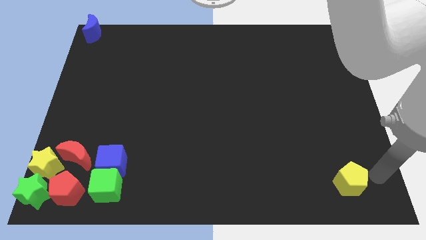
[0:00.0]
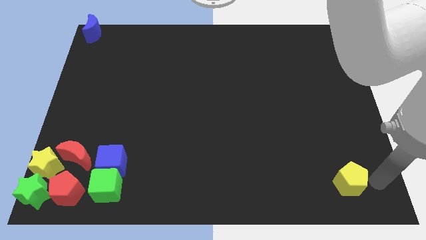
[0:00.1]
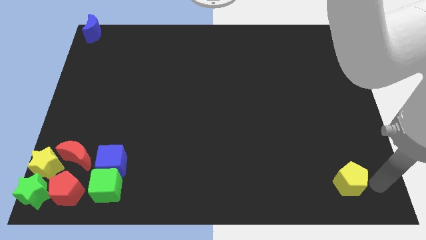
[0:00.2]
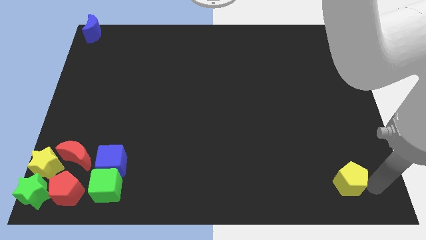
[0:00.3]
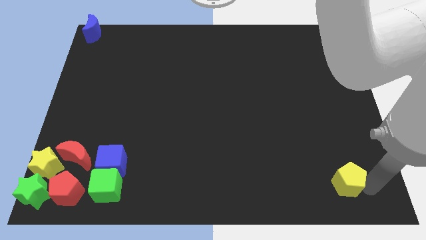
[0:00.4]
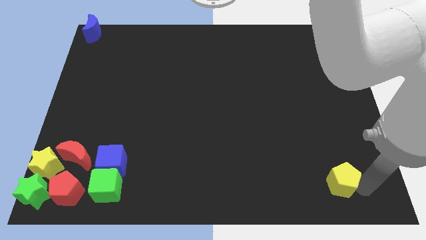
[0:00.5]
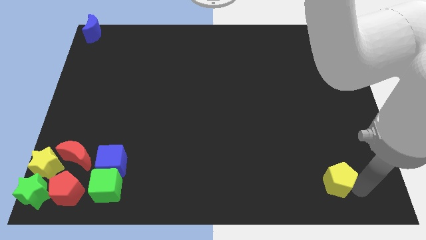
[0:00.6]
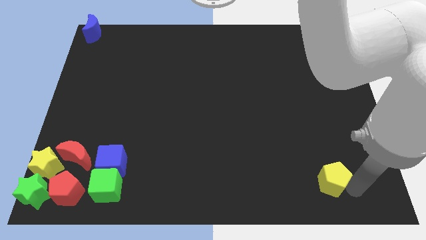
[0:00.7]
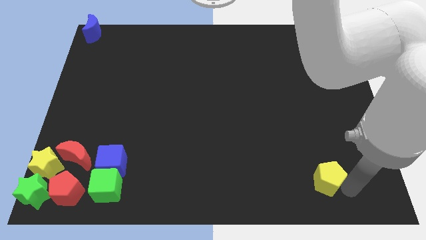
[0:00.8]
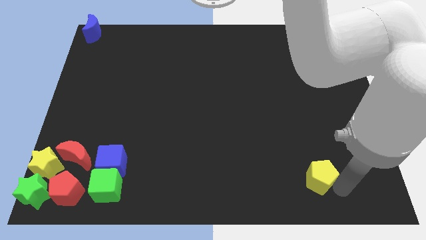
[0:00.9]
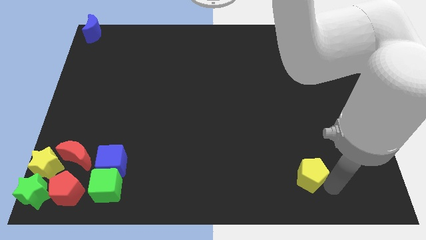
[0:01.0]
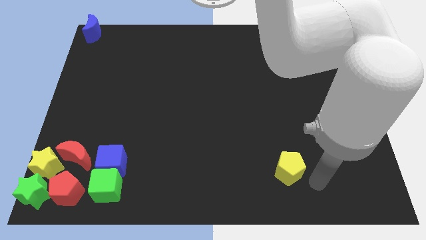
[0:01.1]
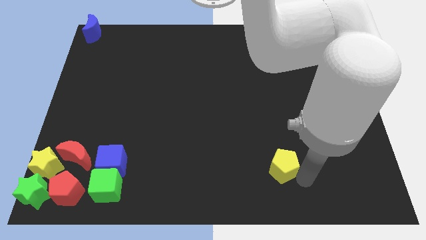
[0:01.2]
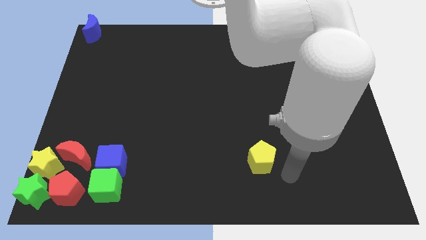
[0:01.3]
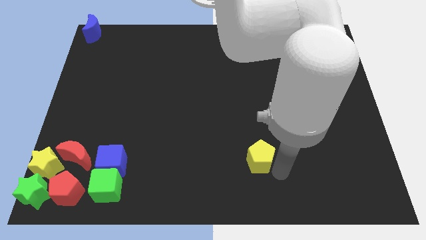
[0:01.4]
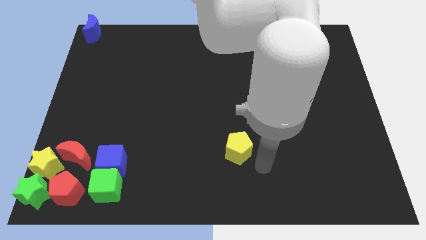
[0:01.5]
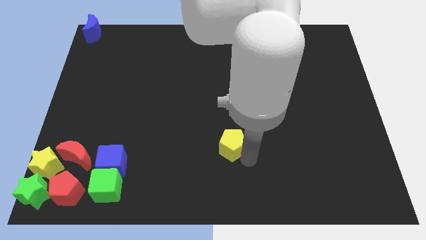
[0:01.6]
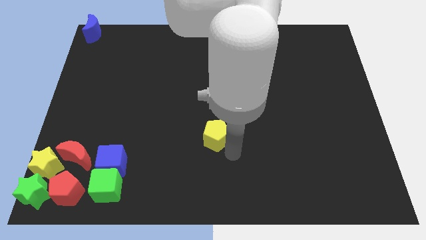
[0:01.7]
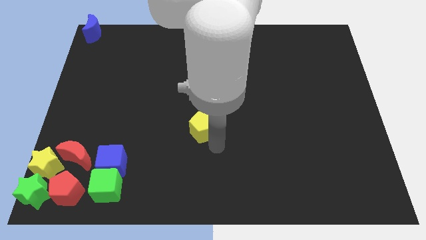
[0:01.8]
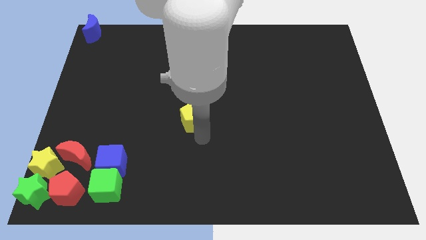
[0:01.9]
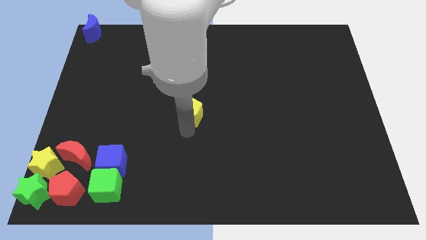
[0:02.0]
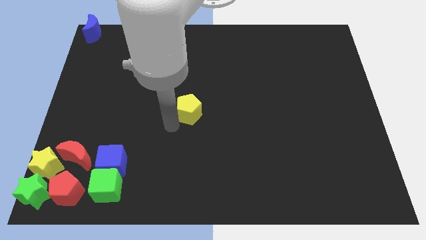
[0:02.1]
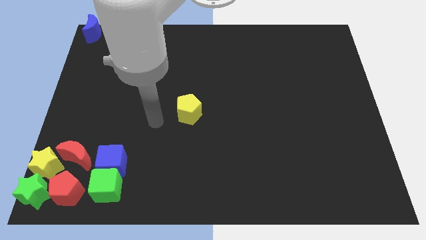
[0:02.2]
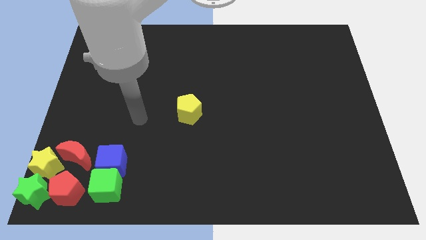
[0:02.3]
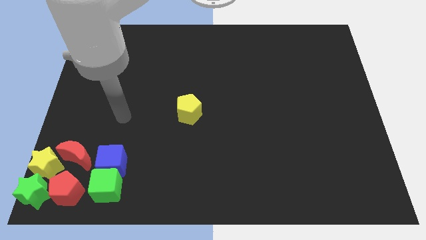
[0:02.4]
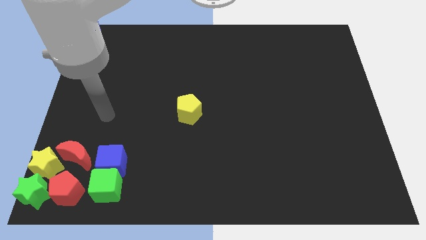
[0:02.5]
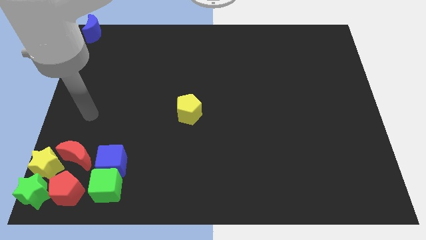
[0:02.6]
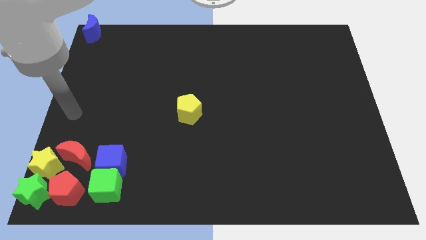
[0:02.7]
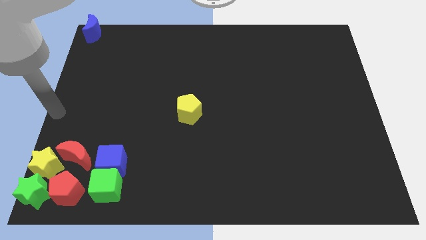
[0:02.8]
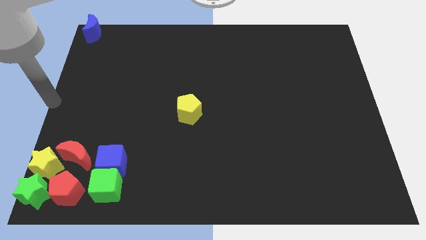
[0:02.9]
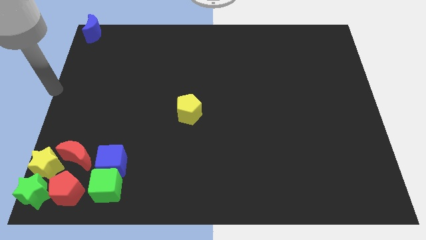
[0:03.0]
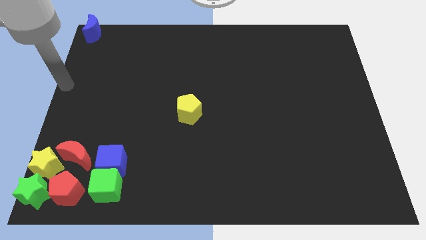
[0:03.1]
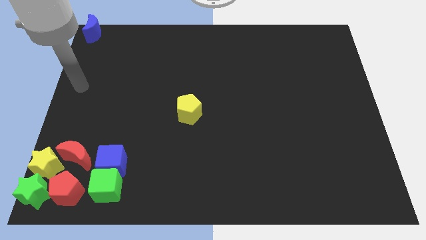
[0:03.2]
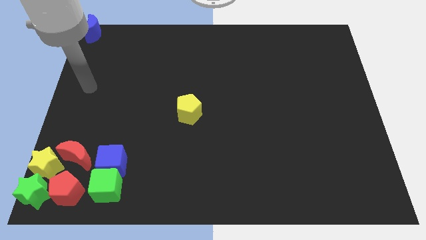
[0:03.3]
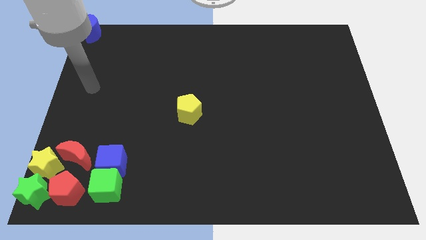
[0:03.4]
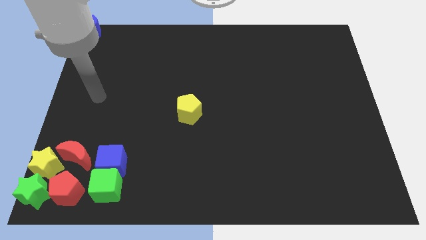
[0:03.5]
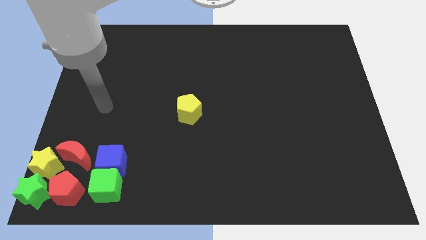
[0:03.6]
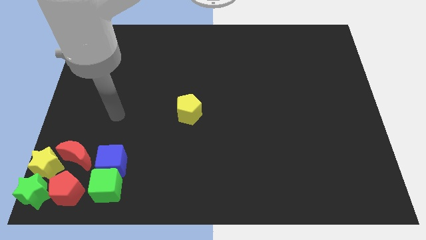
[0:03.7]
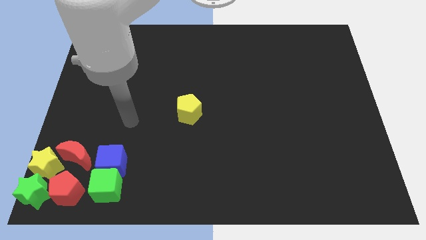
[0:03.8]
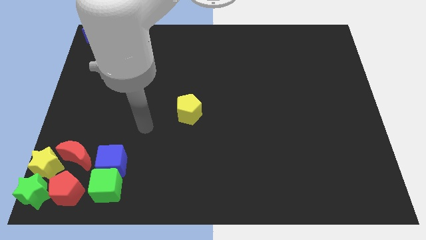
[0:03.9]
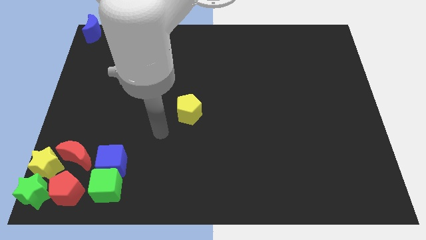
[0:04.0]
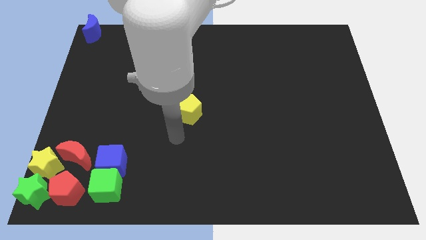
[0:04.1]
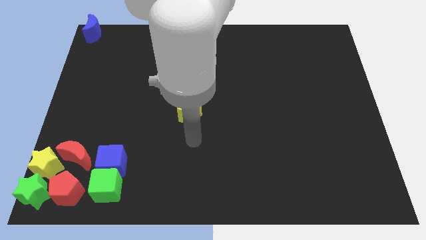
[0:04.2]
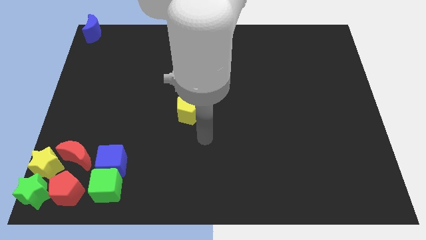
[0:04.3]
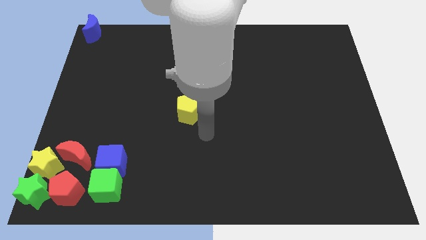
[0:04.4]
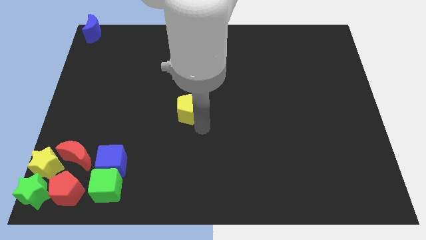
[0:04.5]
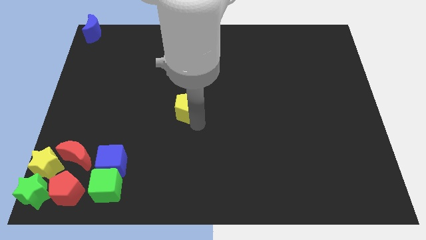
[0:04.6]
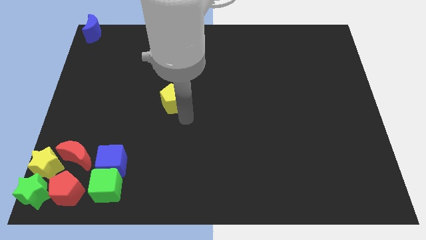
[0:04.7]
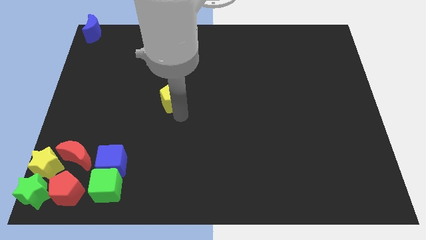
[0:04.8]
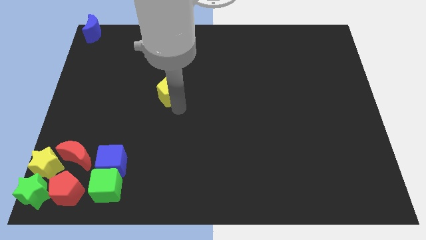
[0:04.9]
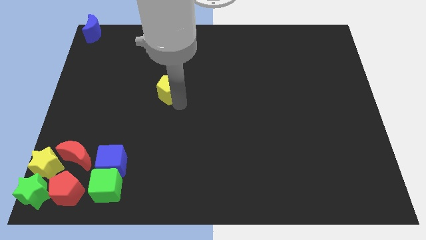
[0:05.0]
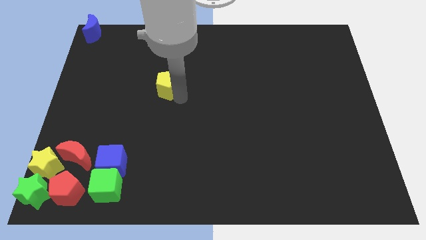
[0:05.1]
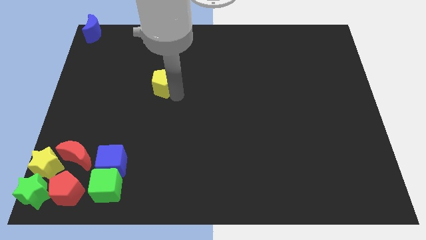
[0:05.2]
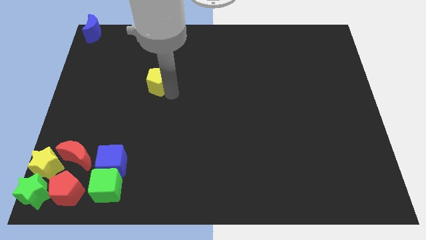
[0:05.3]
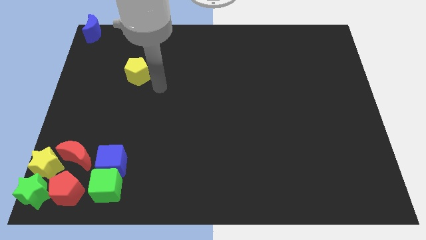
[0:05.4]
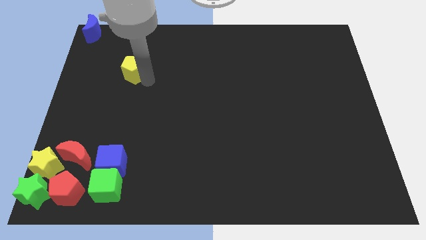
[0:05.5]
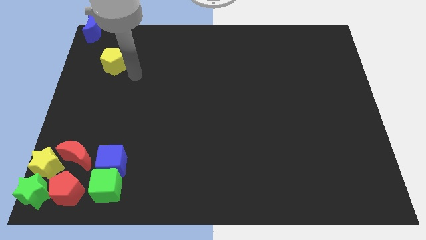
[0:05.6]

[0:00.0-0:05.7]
push the yellow pentagon vertically above the blue cube

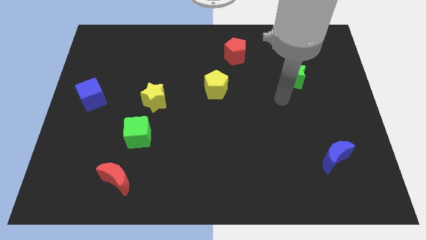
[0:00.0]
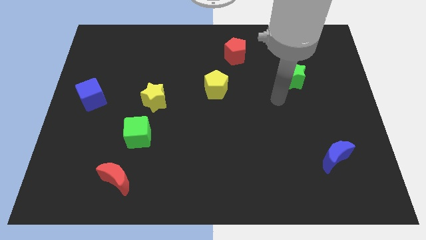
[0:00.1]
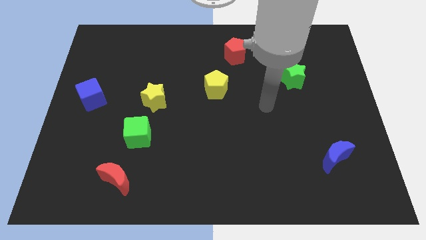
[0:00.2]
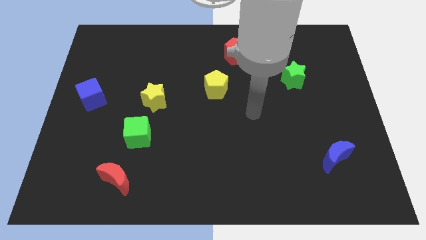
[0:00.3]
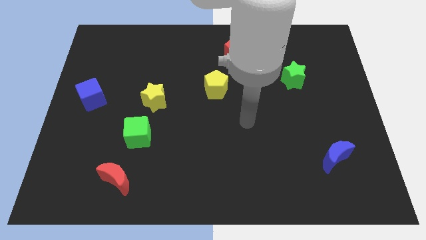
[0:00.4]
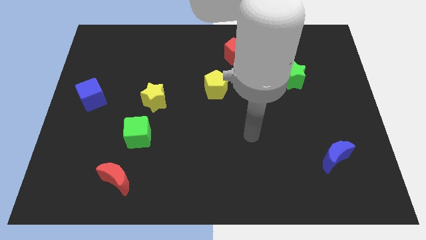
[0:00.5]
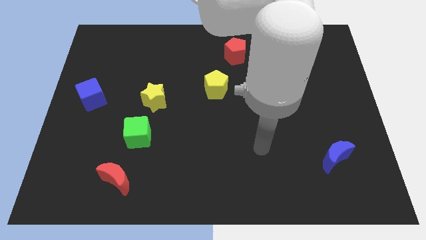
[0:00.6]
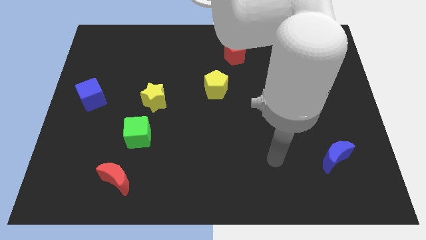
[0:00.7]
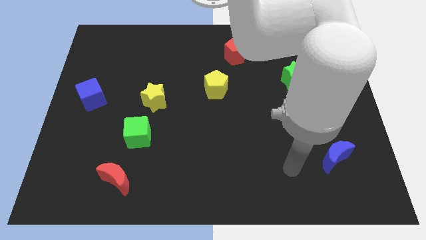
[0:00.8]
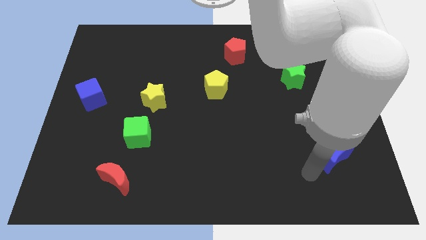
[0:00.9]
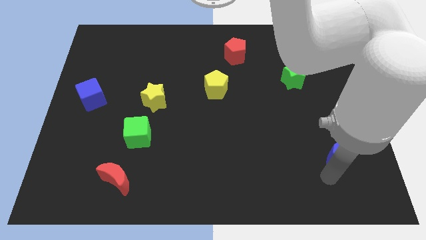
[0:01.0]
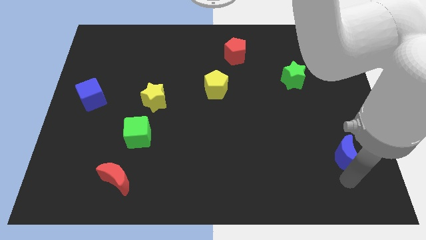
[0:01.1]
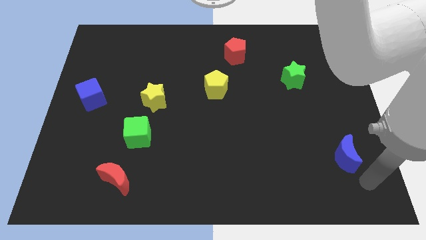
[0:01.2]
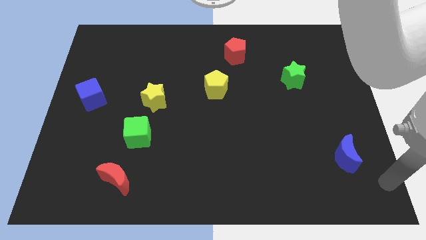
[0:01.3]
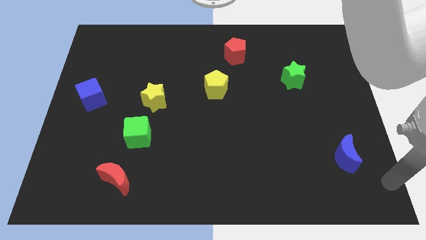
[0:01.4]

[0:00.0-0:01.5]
move the blue moon slightly to the right

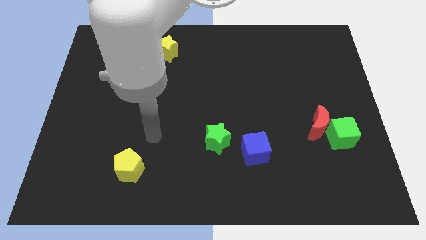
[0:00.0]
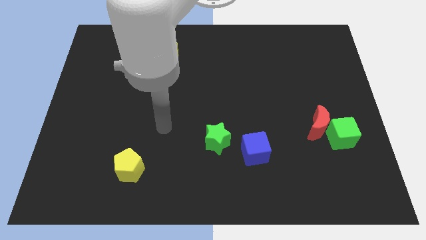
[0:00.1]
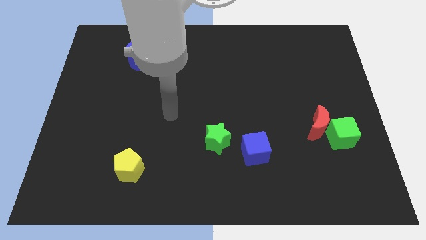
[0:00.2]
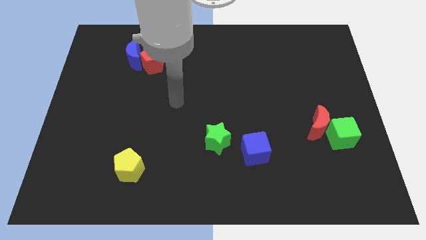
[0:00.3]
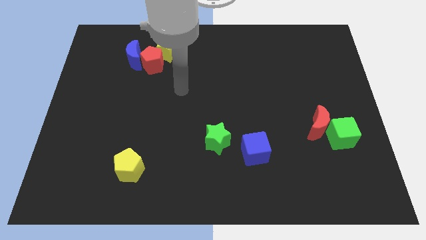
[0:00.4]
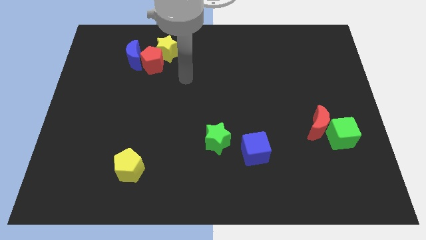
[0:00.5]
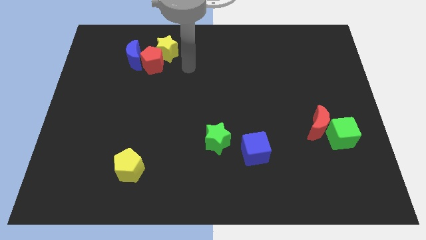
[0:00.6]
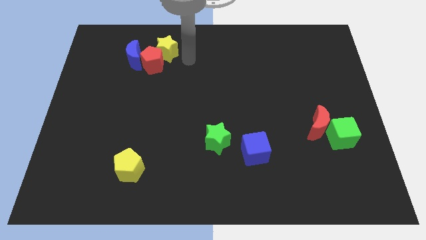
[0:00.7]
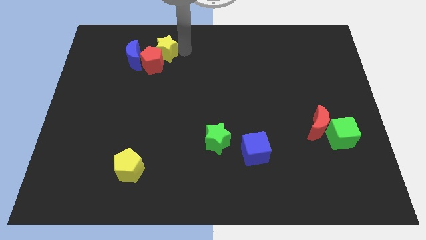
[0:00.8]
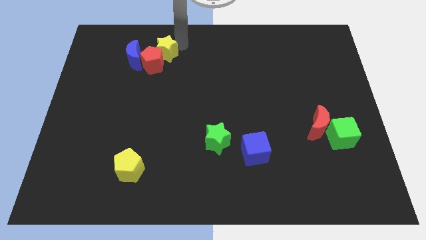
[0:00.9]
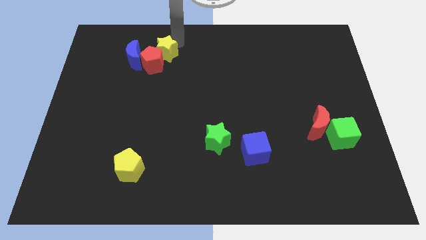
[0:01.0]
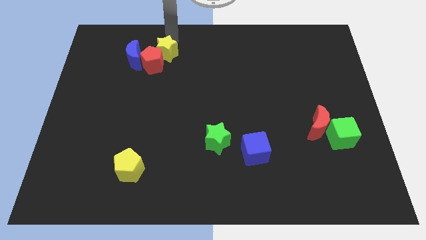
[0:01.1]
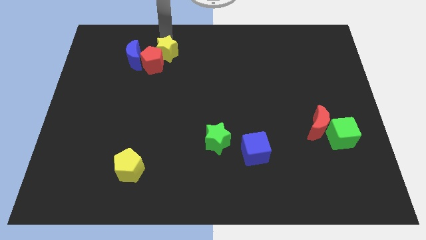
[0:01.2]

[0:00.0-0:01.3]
move your arm to the top side of the yellow star

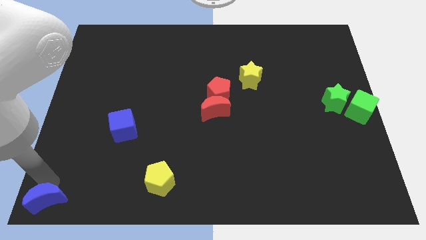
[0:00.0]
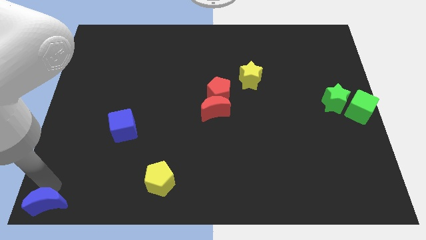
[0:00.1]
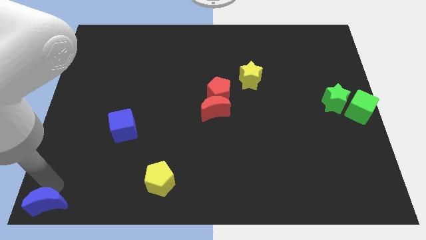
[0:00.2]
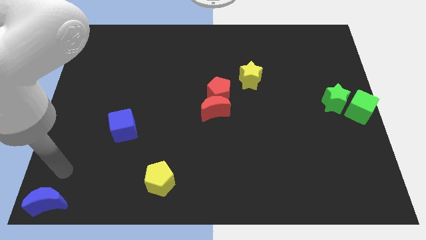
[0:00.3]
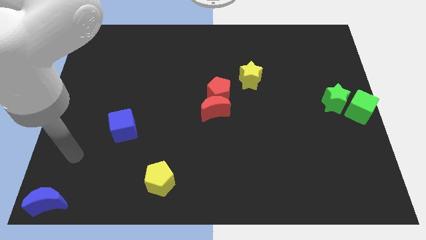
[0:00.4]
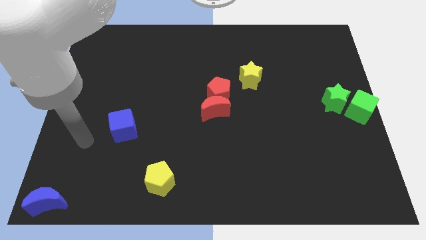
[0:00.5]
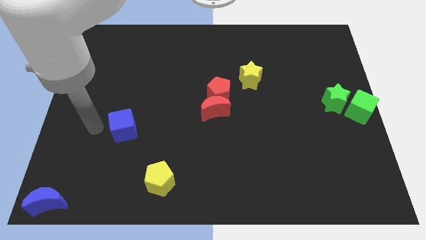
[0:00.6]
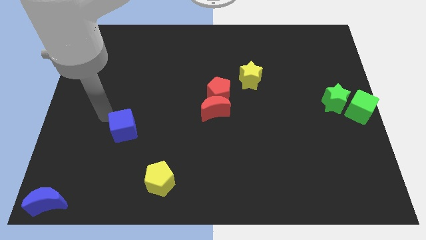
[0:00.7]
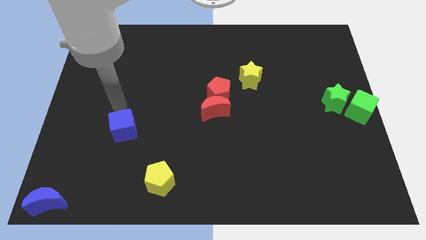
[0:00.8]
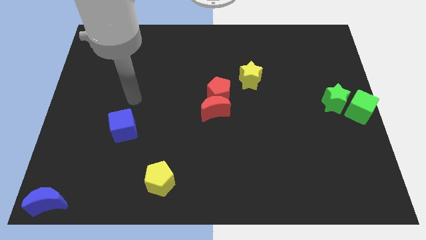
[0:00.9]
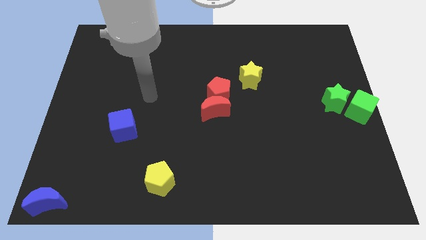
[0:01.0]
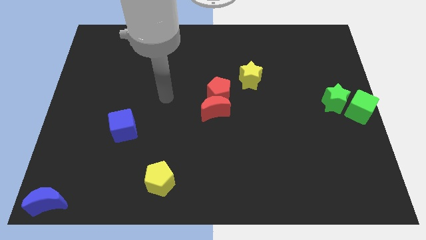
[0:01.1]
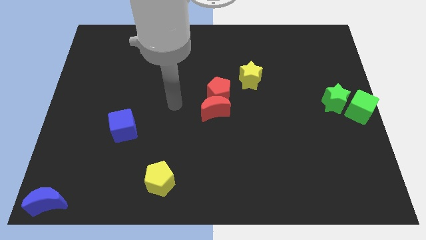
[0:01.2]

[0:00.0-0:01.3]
move your arm away from the blue crescent
